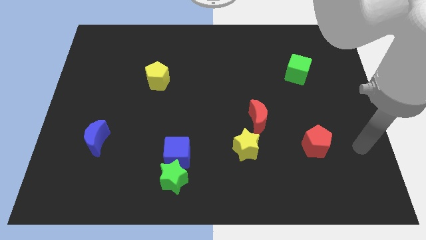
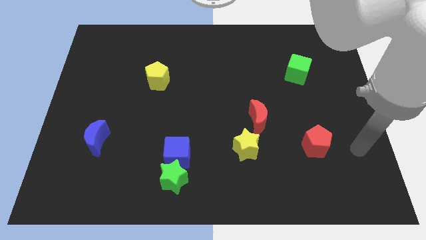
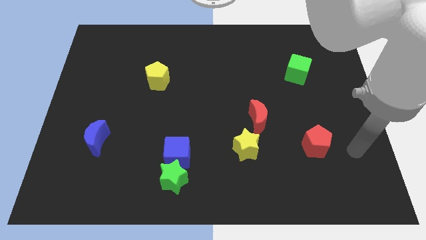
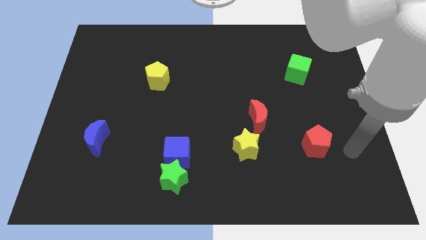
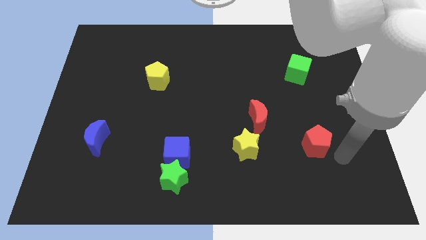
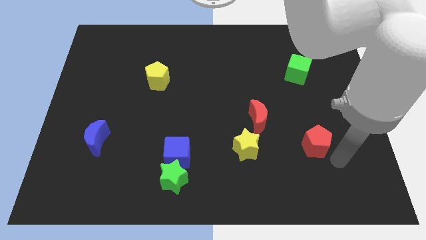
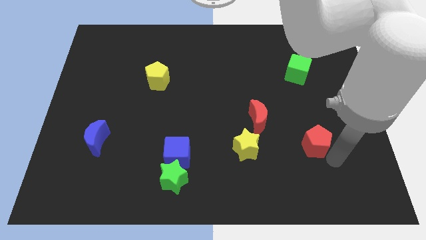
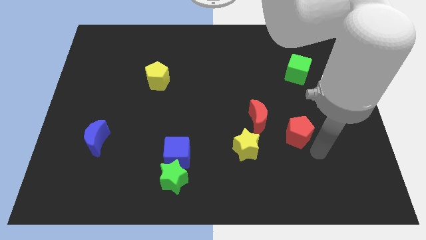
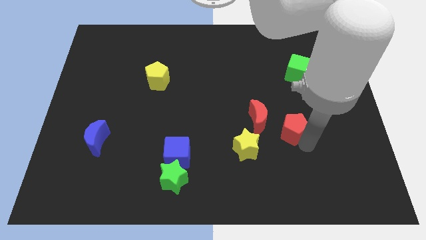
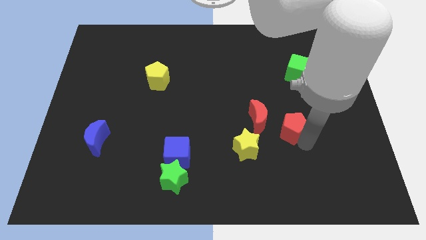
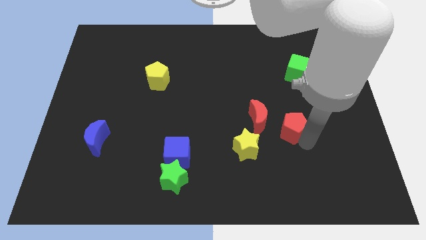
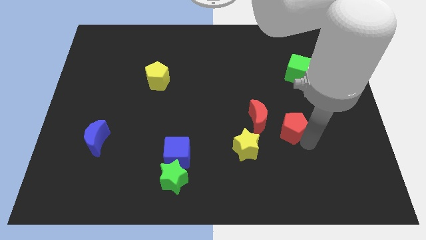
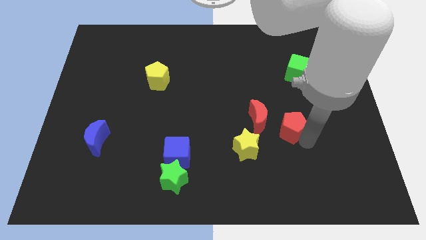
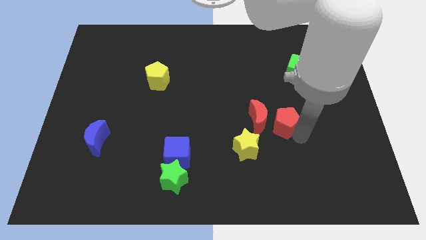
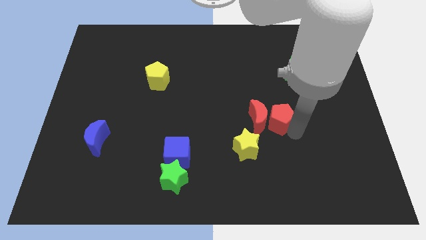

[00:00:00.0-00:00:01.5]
slide the red pentagon towards the red crescent

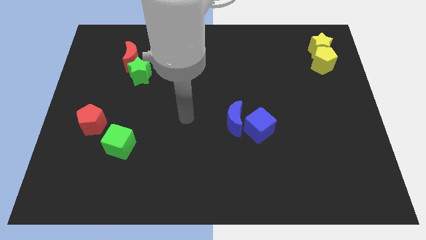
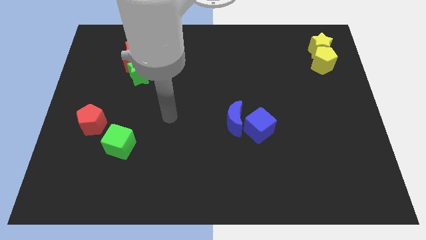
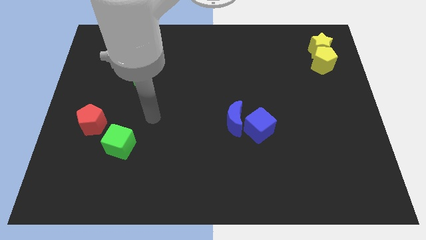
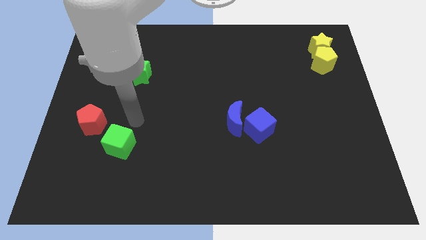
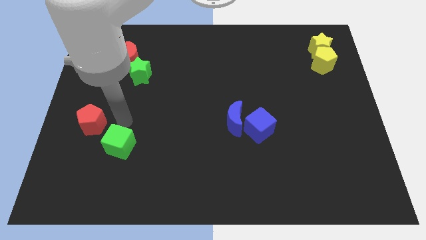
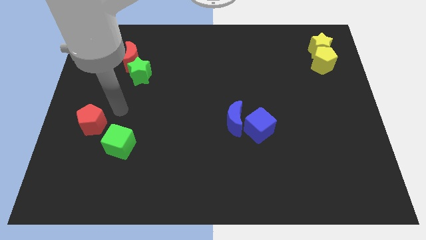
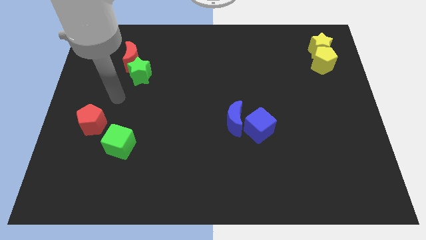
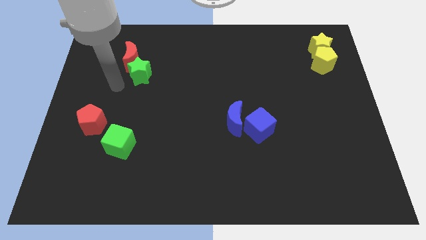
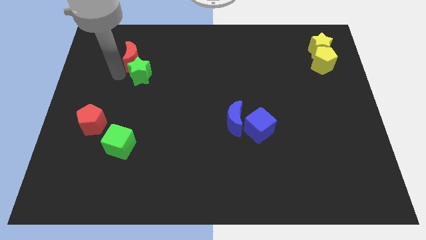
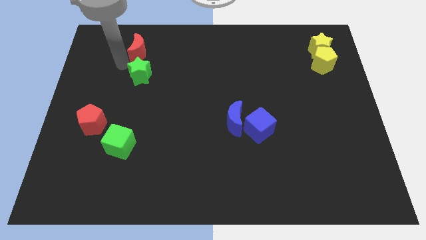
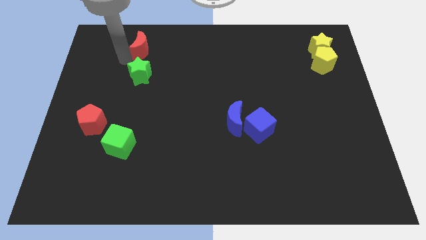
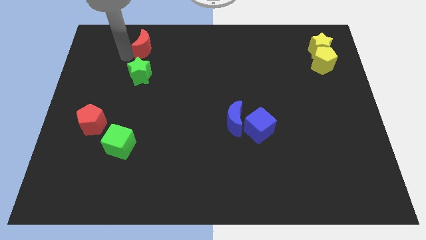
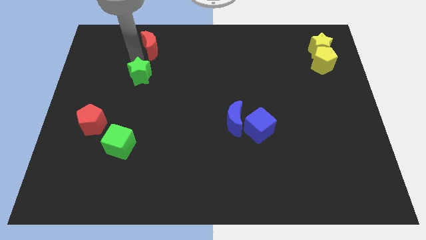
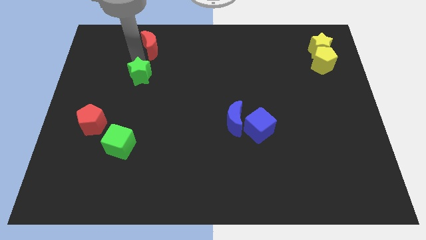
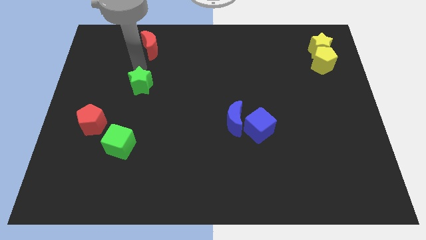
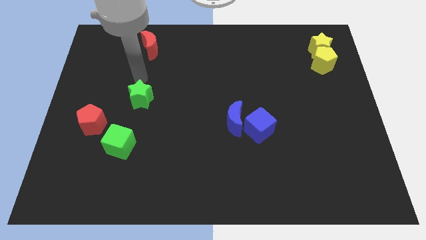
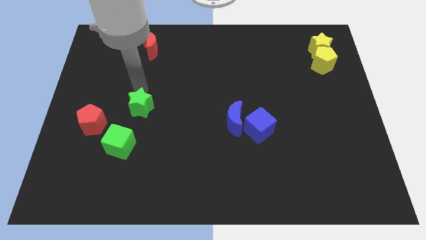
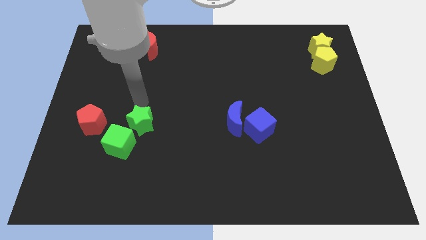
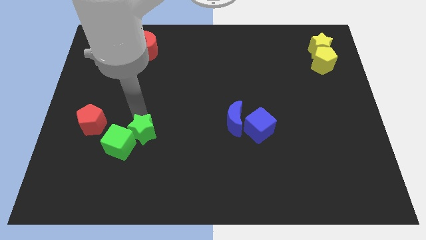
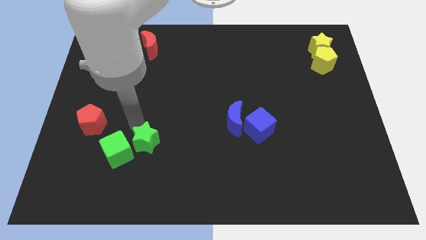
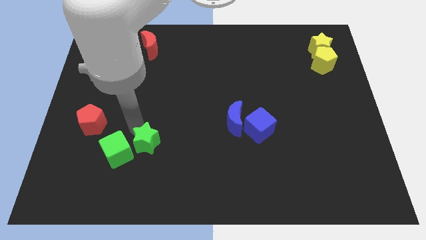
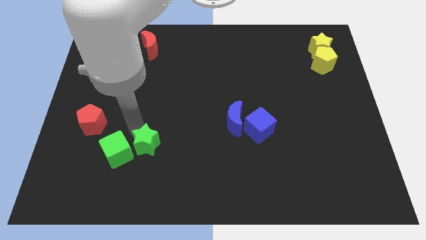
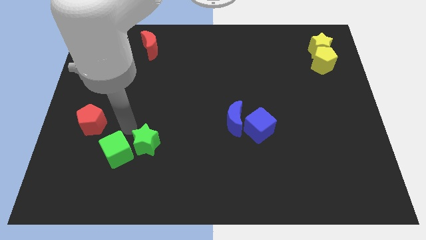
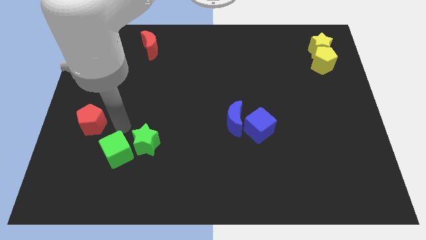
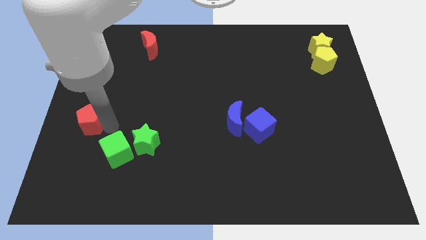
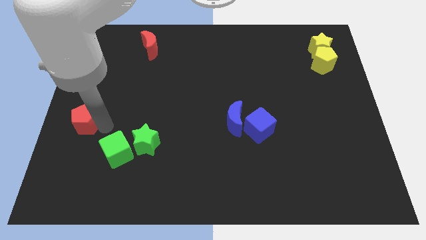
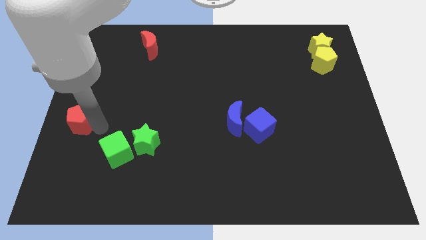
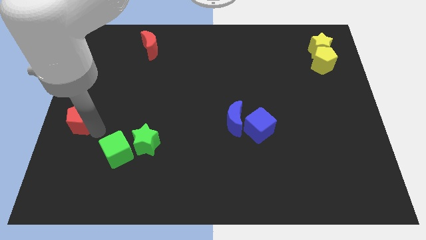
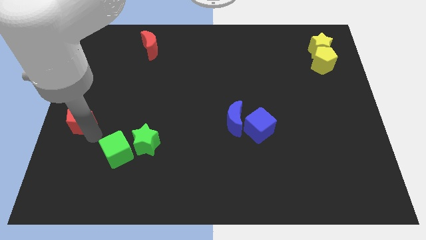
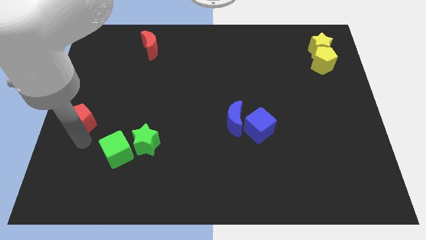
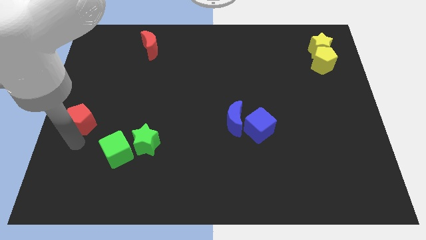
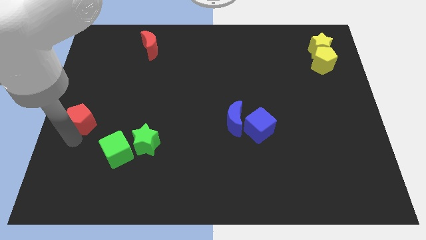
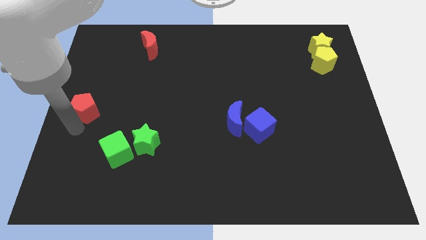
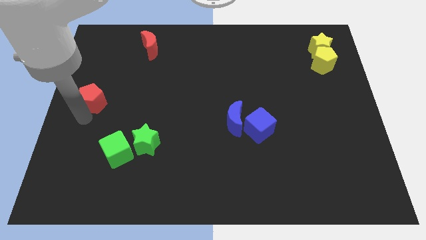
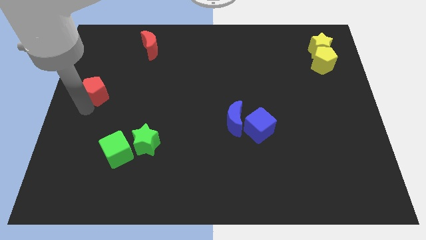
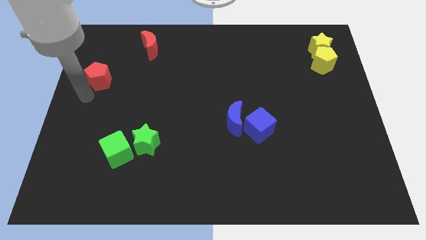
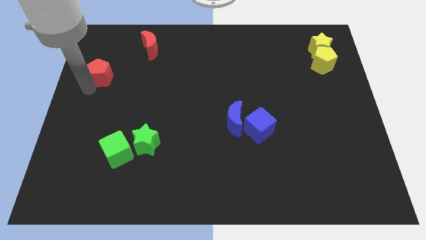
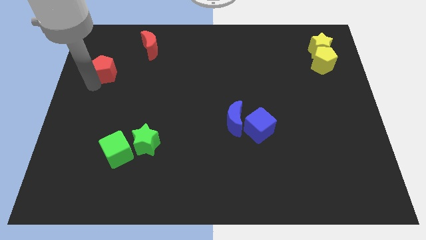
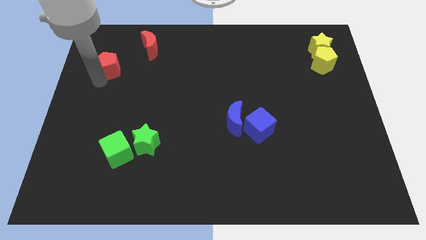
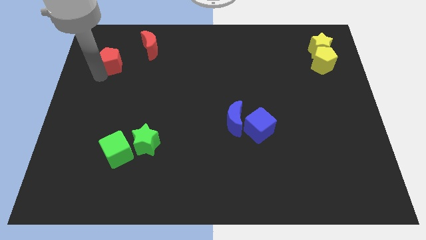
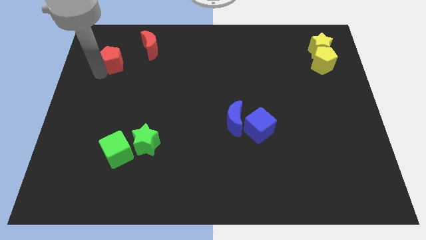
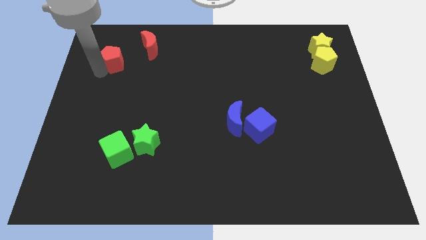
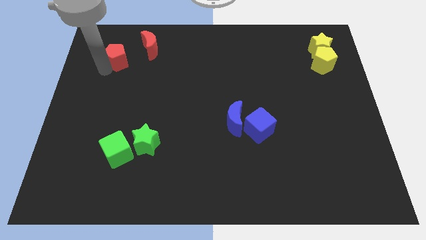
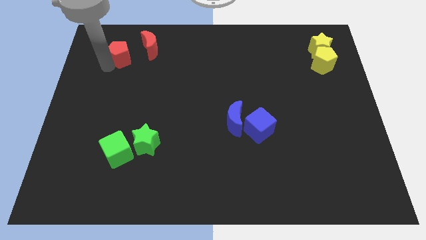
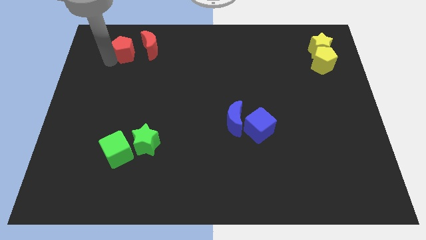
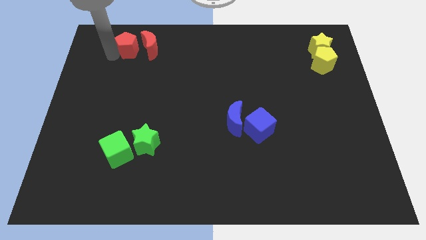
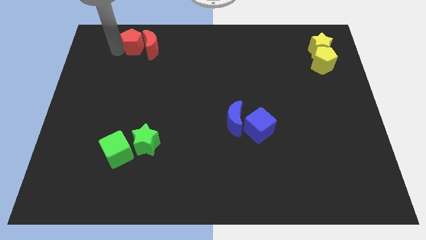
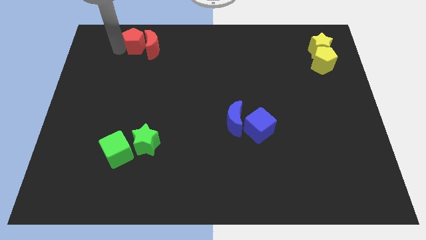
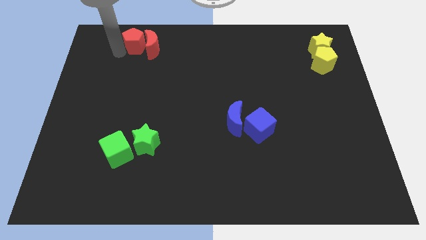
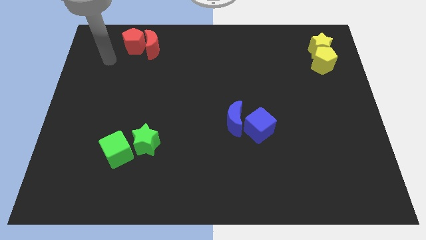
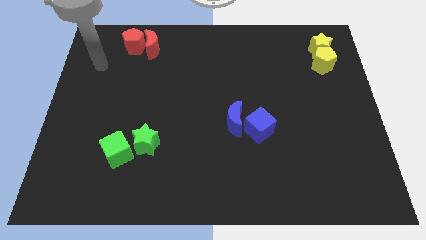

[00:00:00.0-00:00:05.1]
put the red blocks to the top of the green blocks

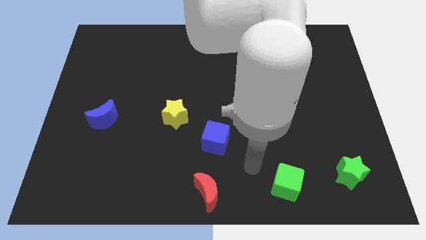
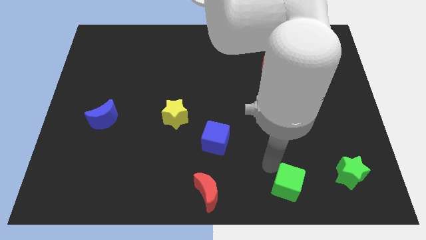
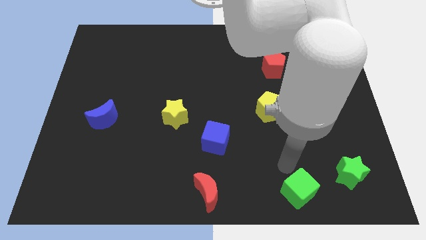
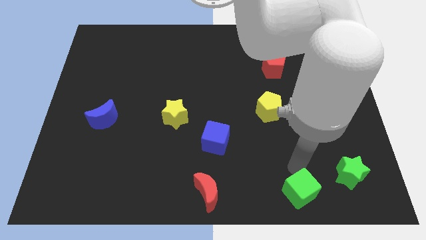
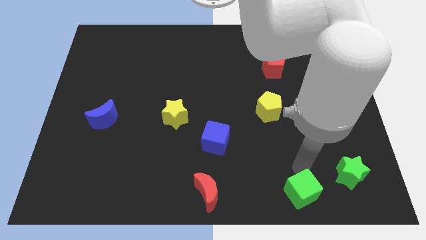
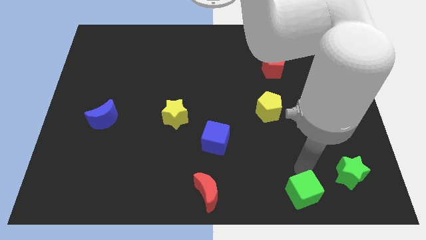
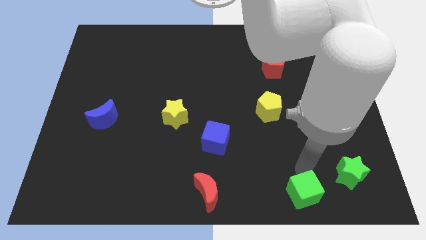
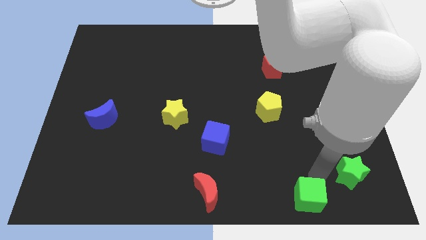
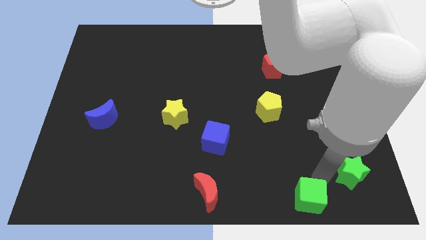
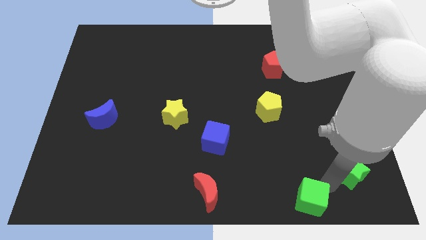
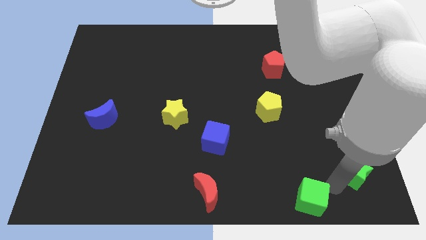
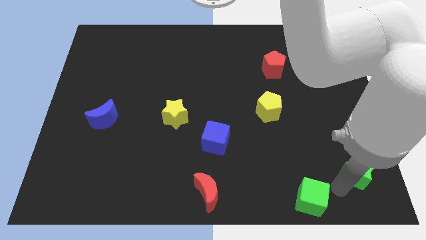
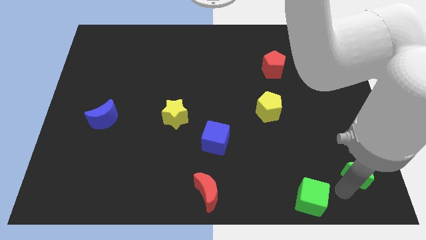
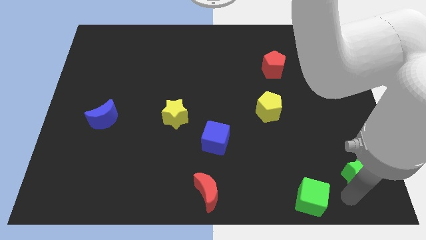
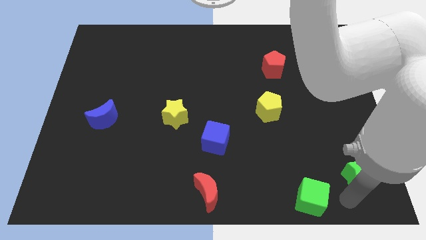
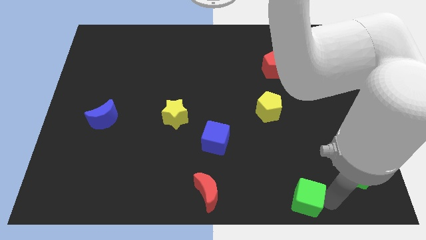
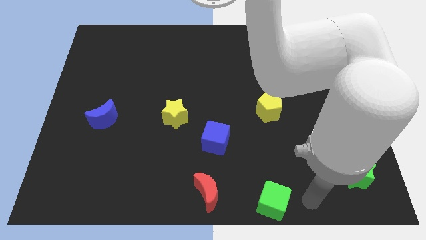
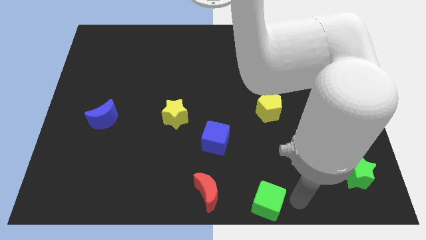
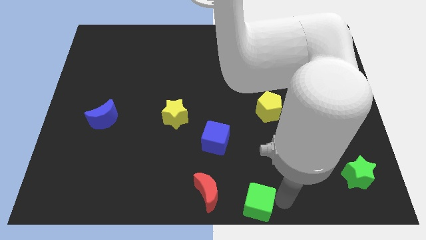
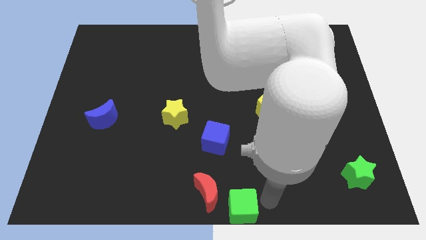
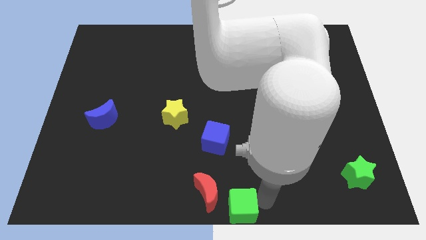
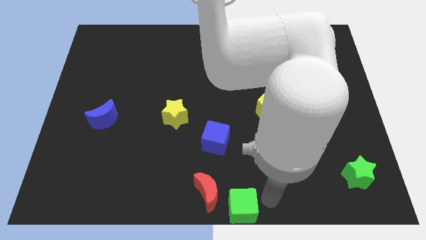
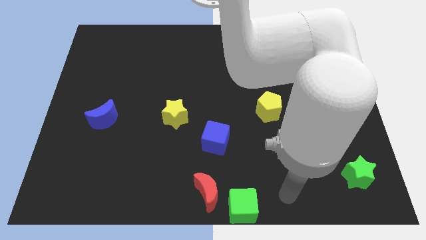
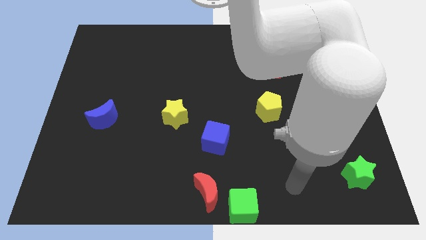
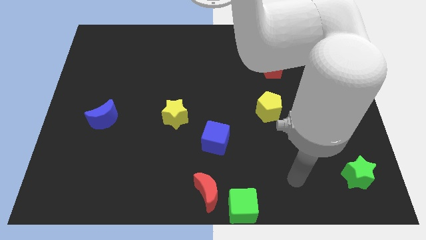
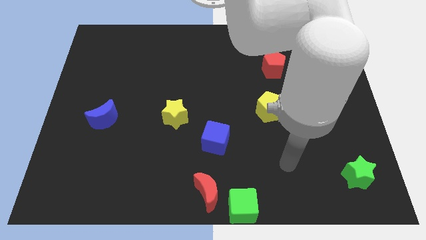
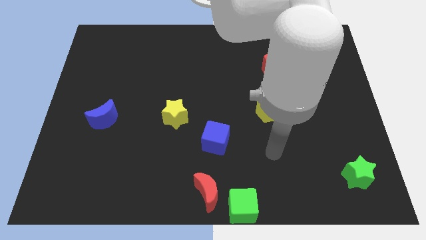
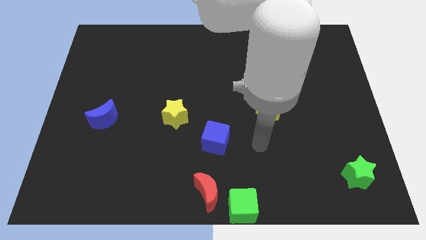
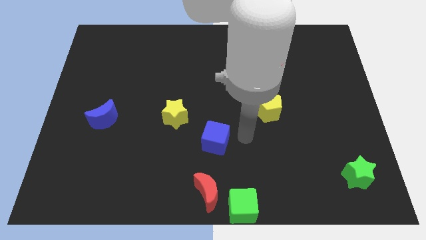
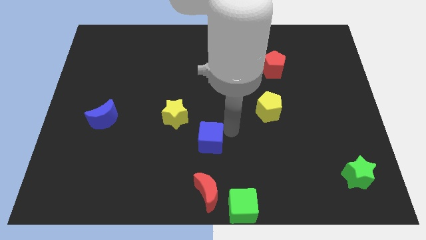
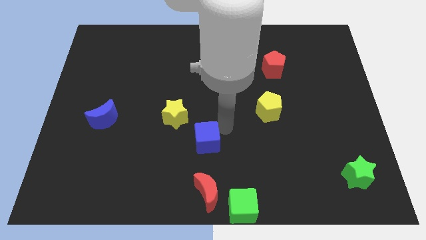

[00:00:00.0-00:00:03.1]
move the green cube to the right of the red crescent
